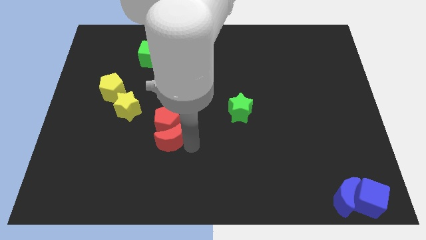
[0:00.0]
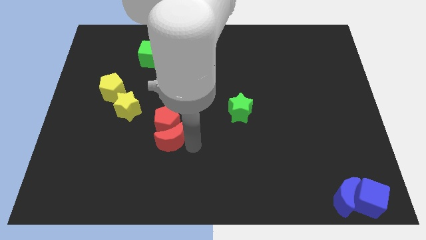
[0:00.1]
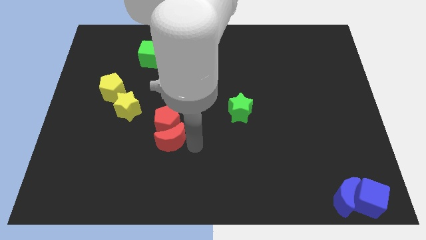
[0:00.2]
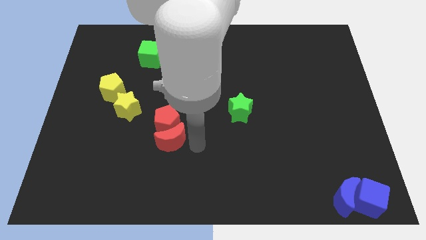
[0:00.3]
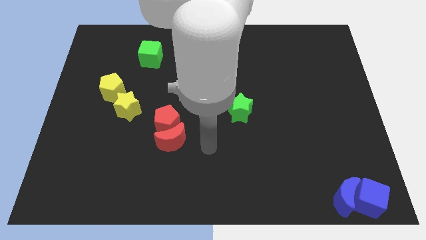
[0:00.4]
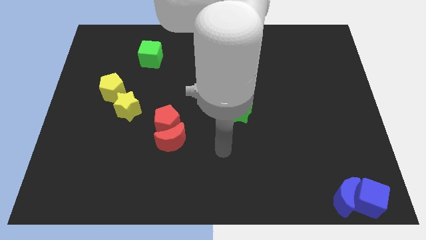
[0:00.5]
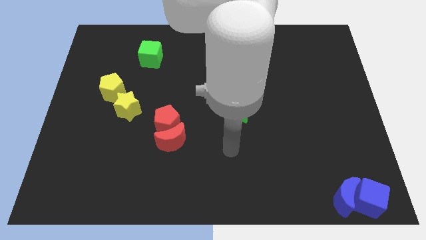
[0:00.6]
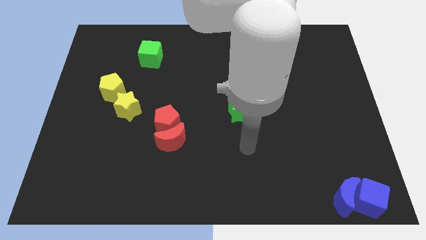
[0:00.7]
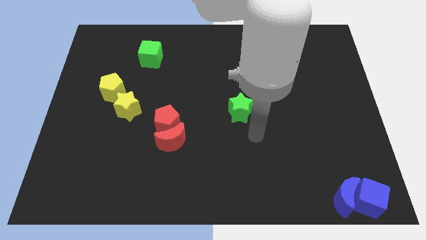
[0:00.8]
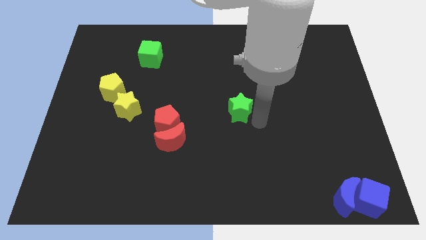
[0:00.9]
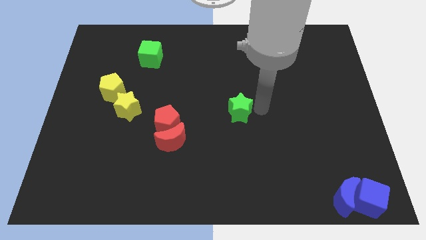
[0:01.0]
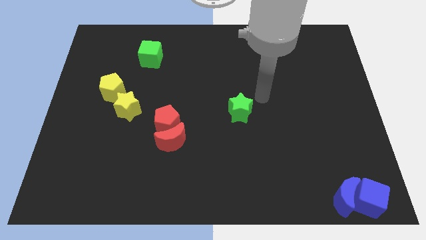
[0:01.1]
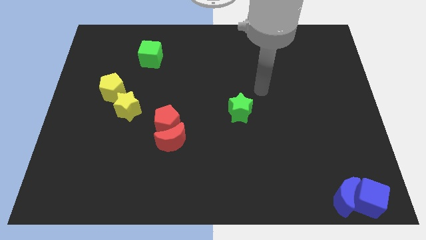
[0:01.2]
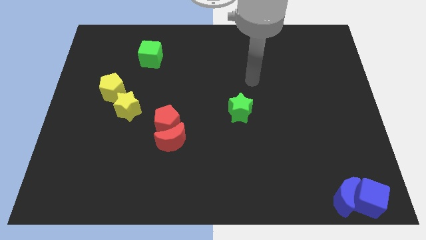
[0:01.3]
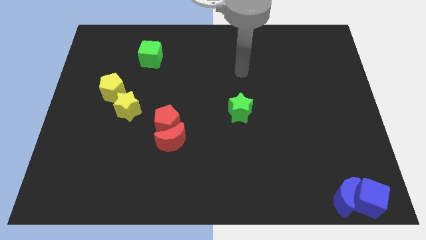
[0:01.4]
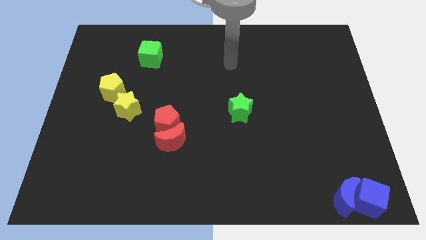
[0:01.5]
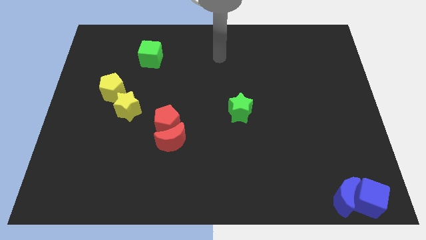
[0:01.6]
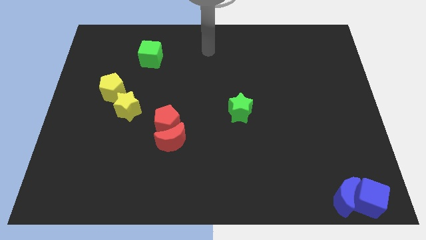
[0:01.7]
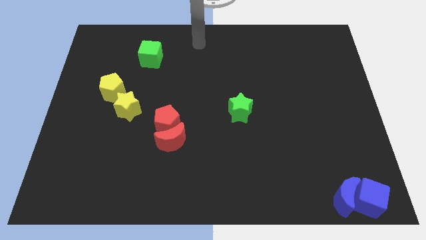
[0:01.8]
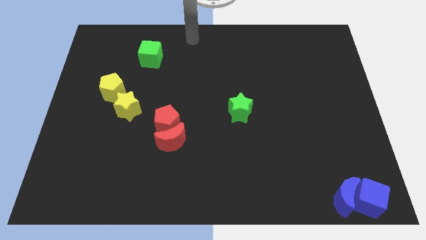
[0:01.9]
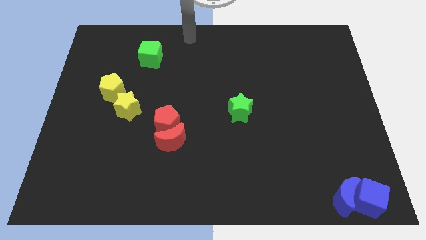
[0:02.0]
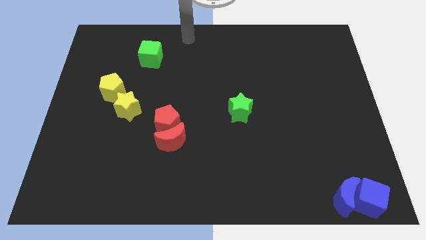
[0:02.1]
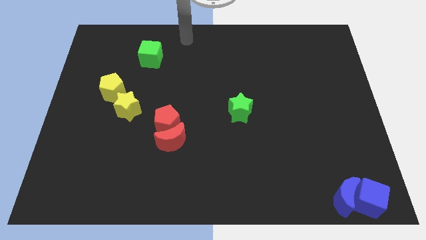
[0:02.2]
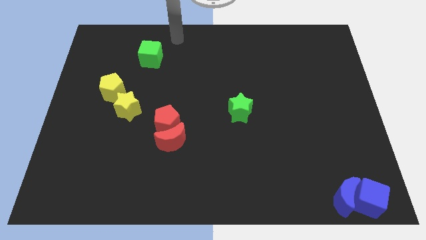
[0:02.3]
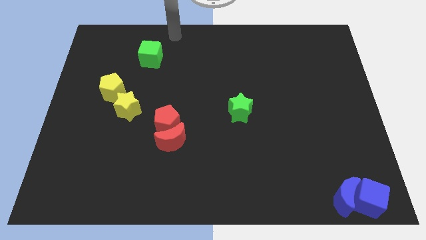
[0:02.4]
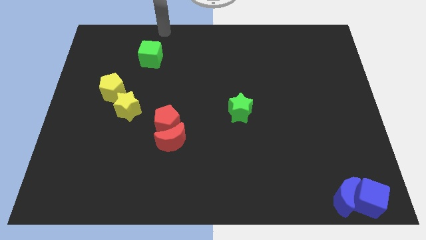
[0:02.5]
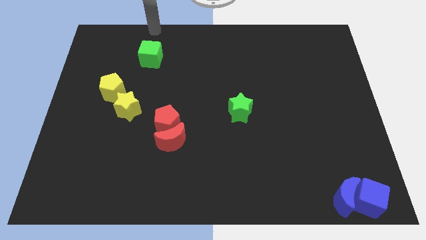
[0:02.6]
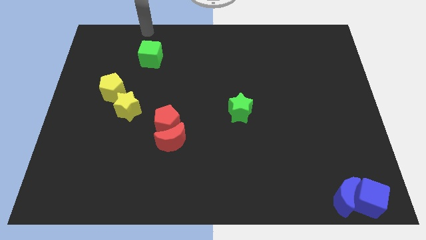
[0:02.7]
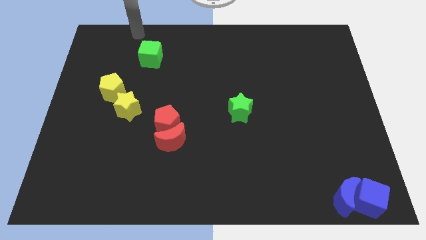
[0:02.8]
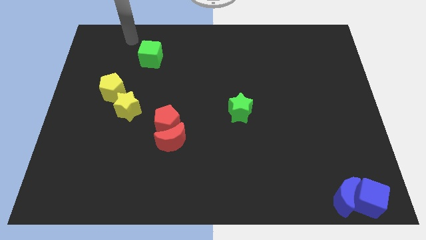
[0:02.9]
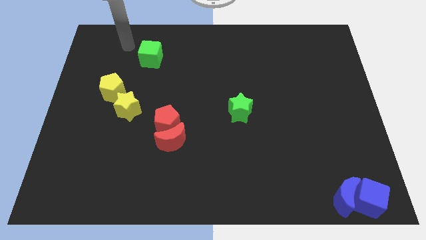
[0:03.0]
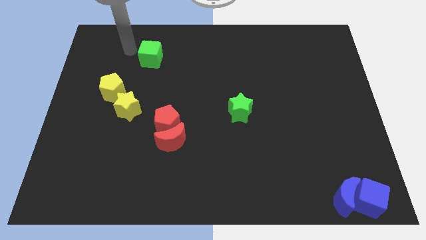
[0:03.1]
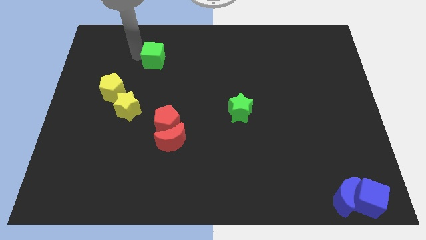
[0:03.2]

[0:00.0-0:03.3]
point your arm to the left side of green cube

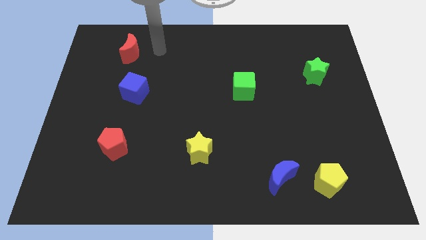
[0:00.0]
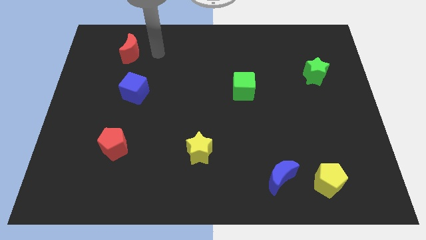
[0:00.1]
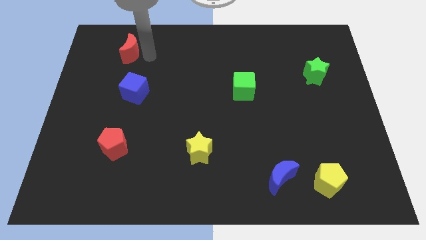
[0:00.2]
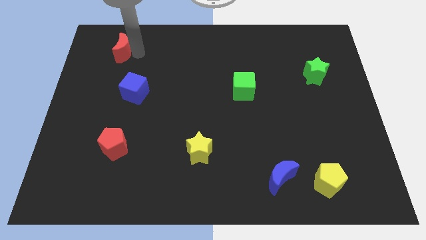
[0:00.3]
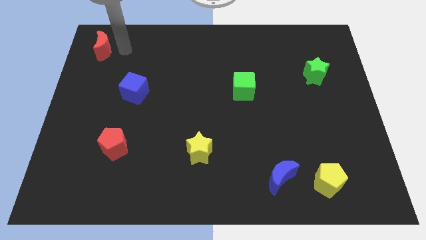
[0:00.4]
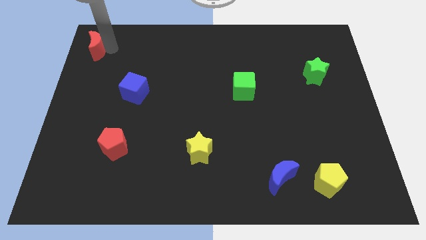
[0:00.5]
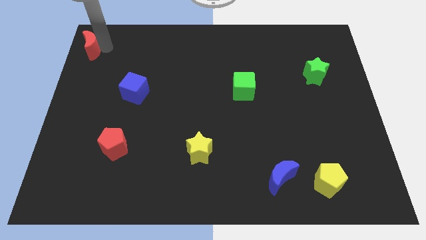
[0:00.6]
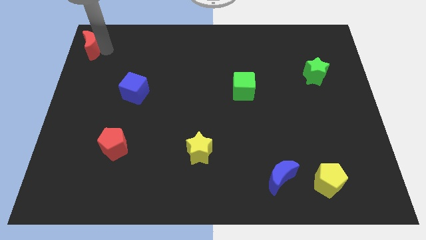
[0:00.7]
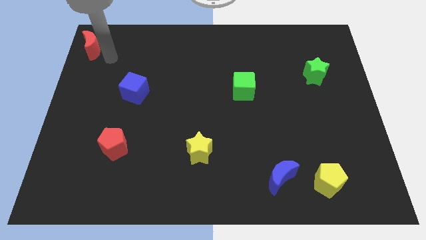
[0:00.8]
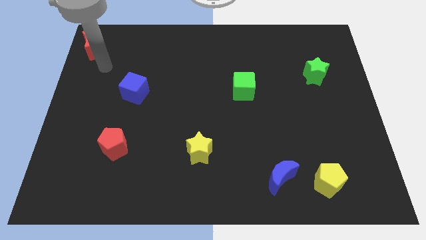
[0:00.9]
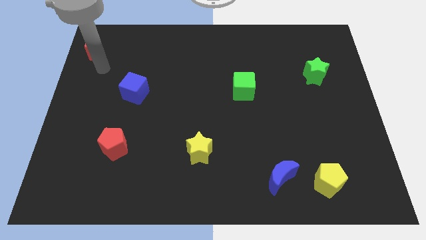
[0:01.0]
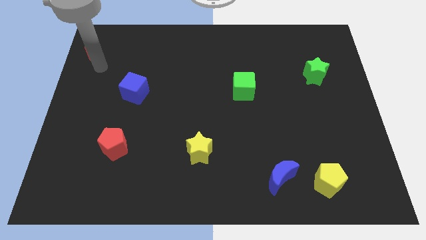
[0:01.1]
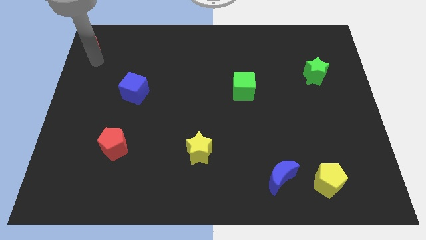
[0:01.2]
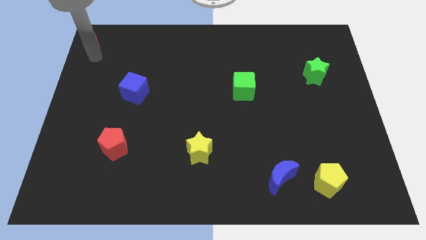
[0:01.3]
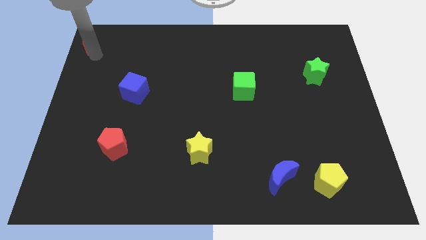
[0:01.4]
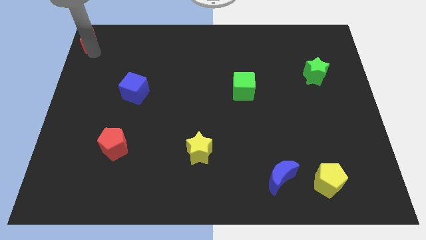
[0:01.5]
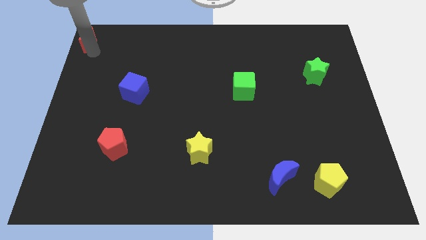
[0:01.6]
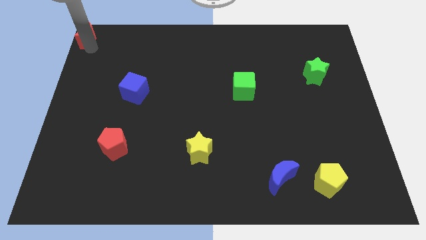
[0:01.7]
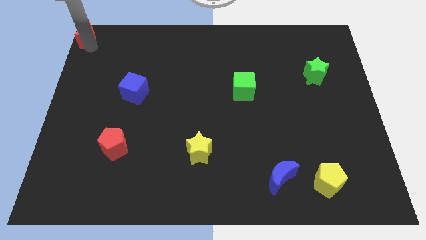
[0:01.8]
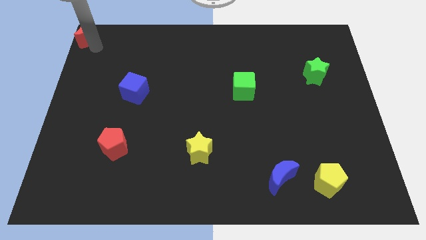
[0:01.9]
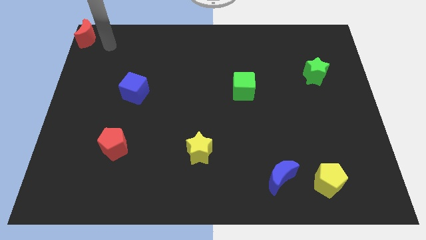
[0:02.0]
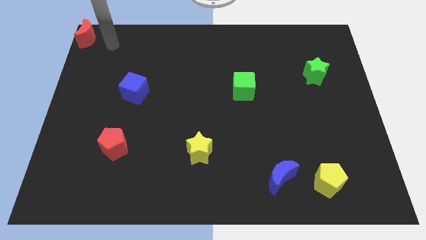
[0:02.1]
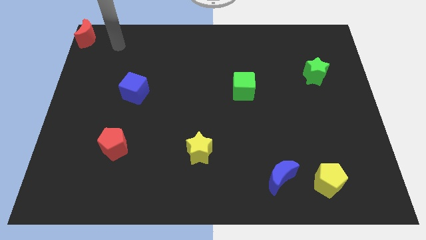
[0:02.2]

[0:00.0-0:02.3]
push the red moon to the top left corner

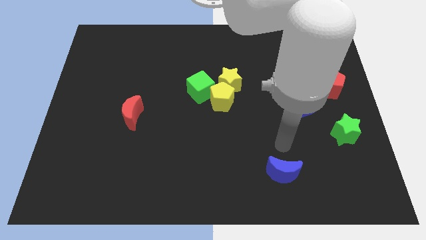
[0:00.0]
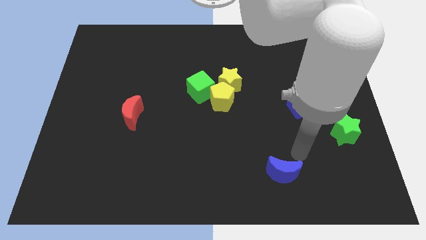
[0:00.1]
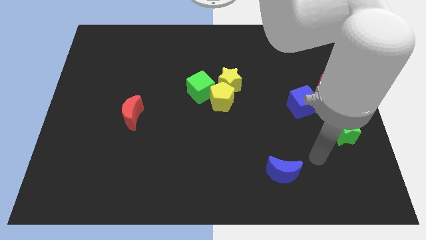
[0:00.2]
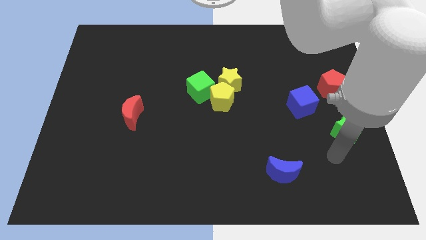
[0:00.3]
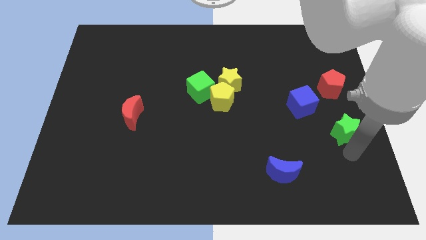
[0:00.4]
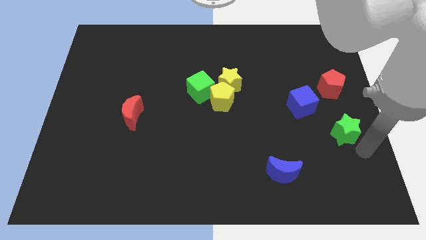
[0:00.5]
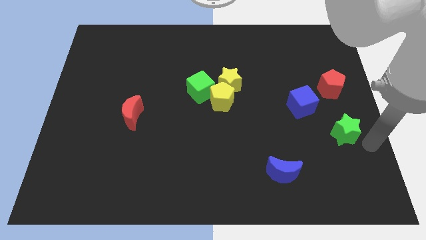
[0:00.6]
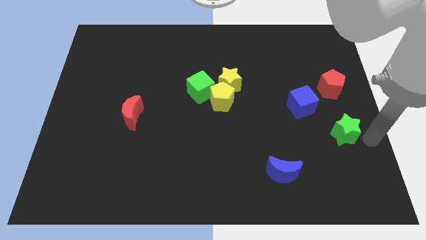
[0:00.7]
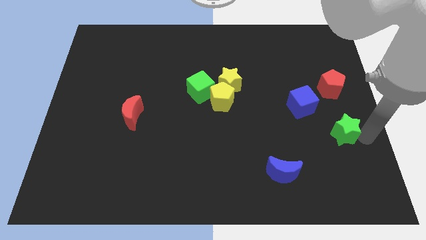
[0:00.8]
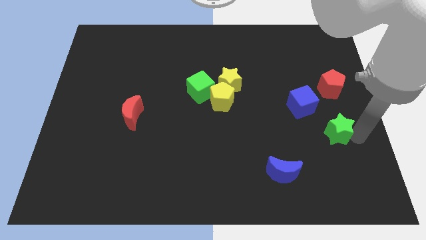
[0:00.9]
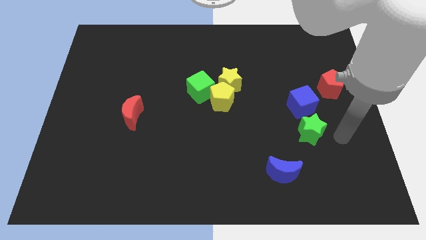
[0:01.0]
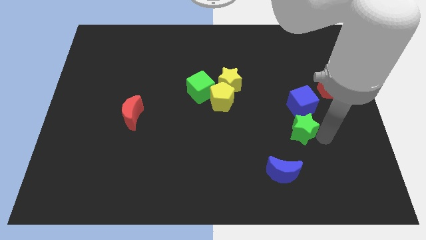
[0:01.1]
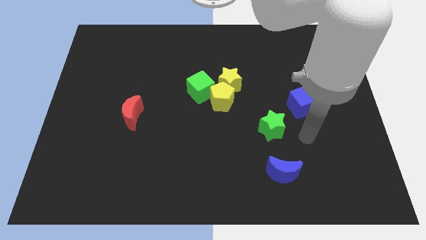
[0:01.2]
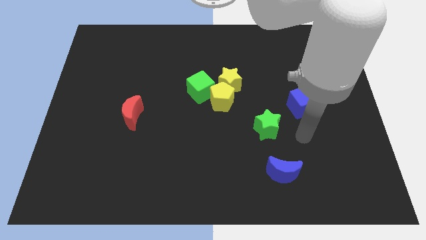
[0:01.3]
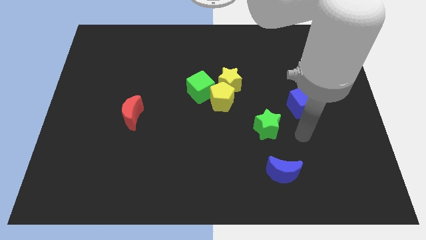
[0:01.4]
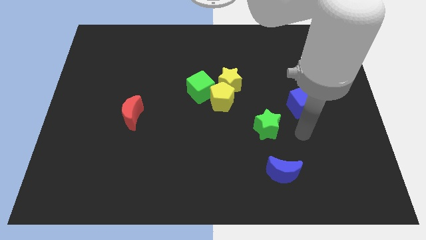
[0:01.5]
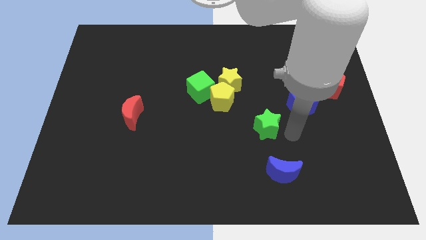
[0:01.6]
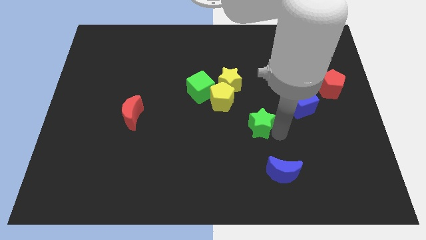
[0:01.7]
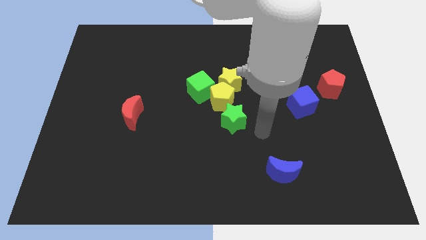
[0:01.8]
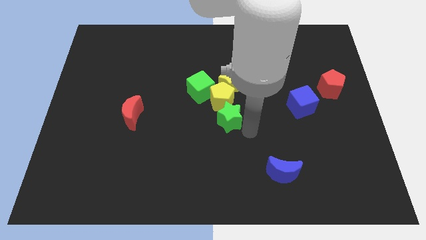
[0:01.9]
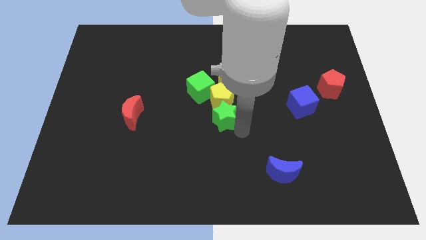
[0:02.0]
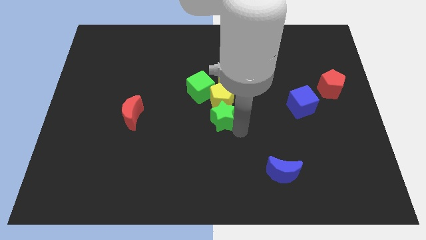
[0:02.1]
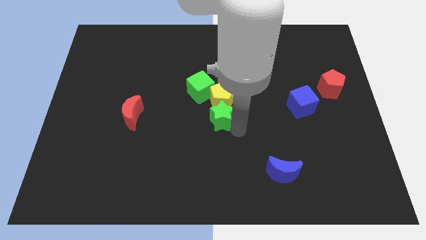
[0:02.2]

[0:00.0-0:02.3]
place the green star below yellow pentagon

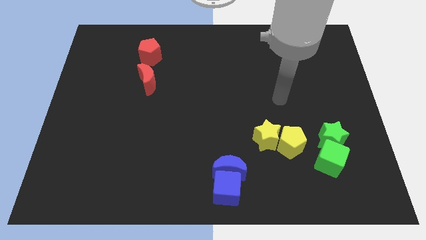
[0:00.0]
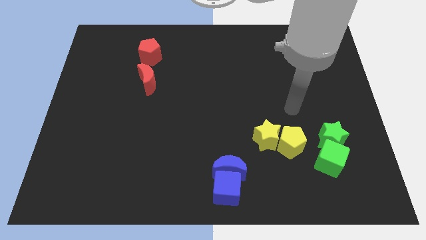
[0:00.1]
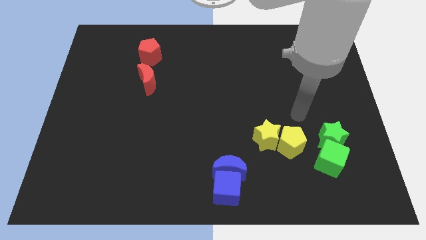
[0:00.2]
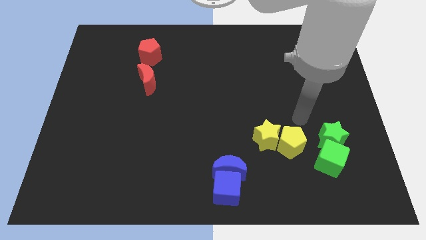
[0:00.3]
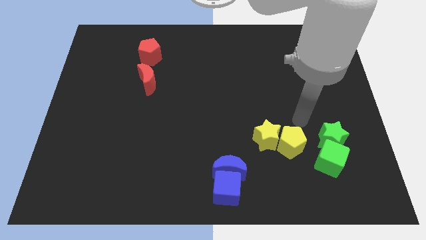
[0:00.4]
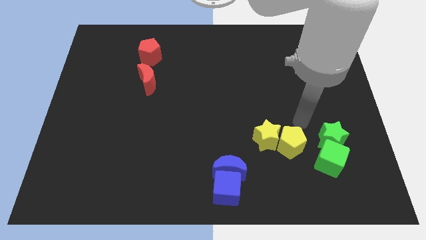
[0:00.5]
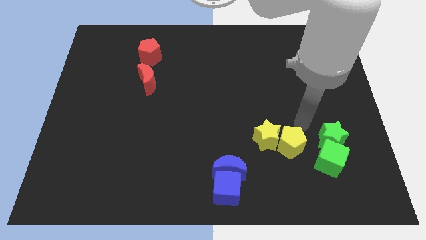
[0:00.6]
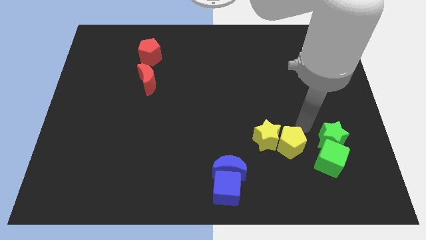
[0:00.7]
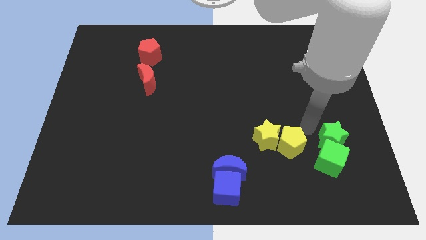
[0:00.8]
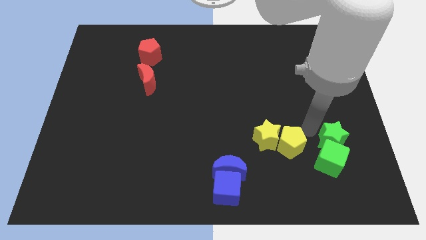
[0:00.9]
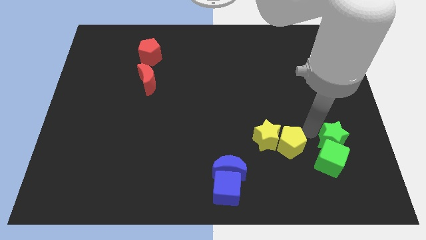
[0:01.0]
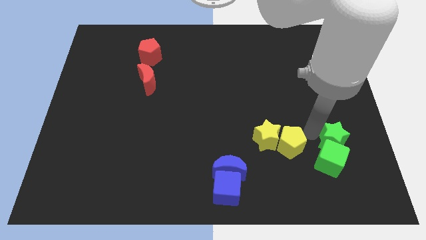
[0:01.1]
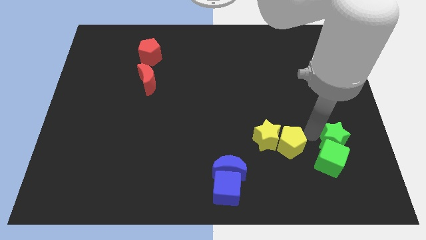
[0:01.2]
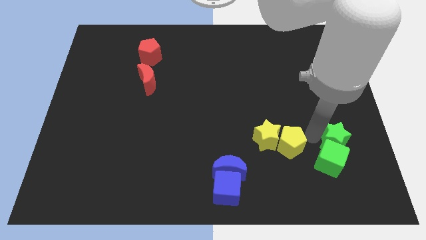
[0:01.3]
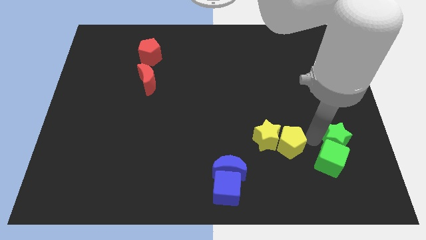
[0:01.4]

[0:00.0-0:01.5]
push the green star slightly to the right of the board
